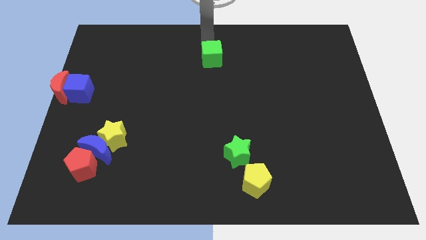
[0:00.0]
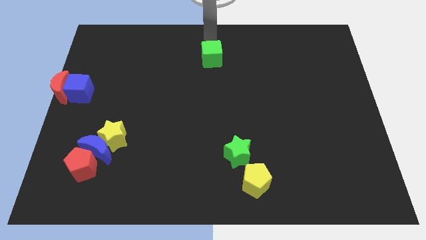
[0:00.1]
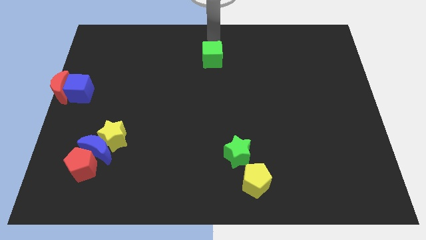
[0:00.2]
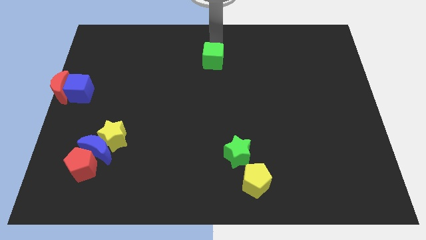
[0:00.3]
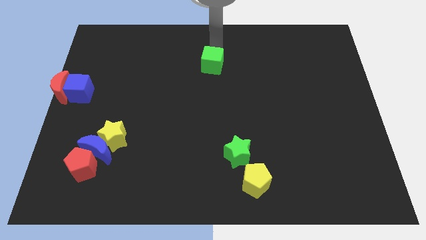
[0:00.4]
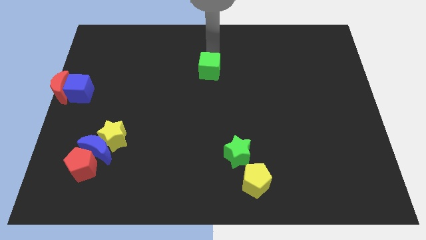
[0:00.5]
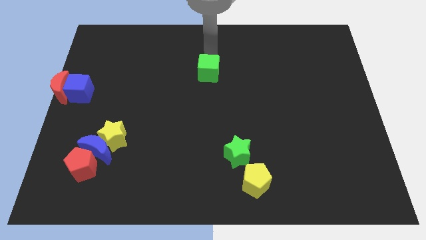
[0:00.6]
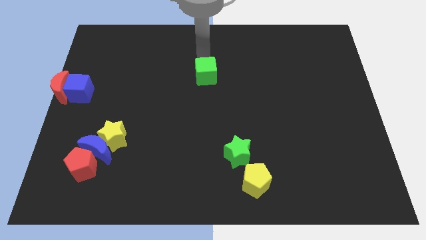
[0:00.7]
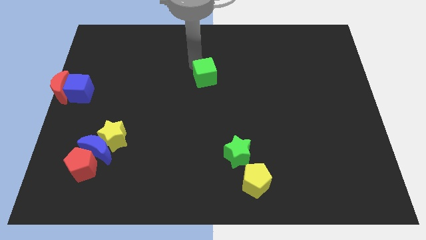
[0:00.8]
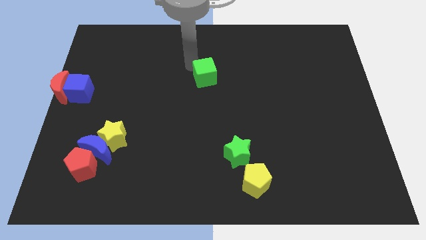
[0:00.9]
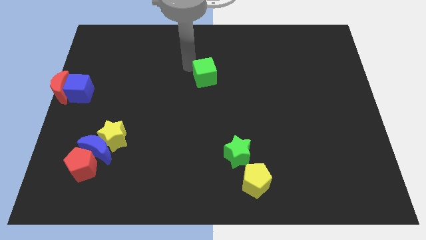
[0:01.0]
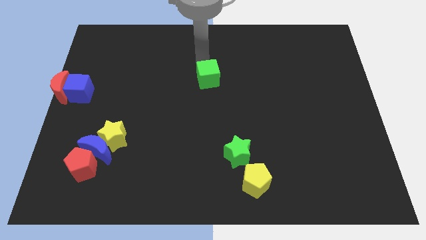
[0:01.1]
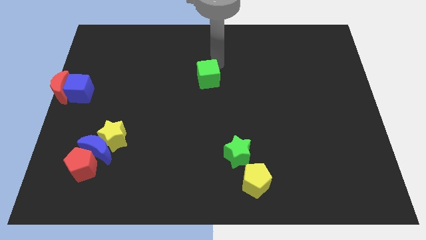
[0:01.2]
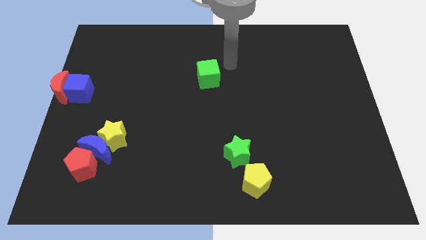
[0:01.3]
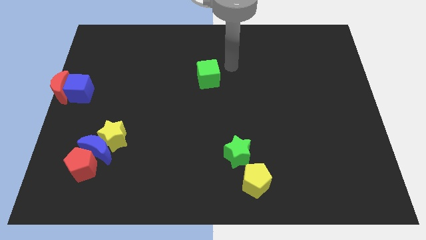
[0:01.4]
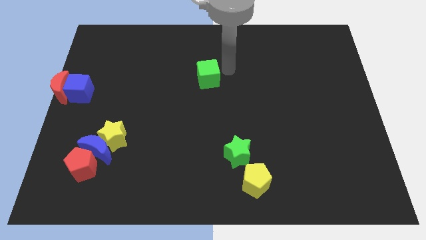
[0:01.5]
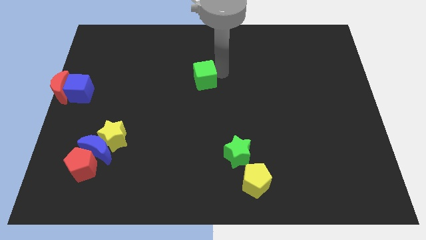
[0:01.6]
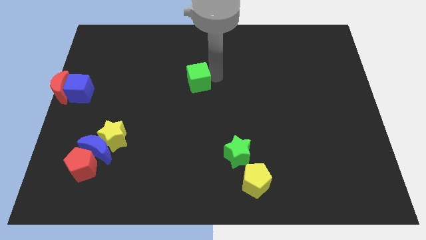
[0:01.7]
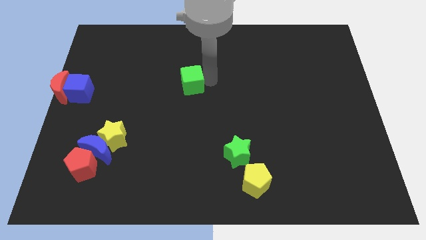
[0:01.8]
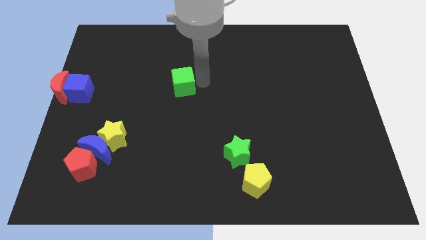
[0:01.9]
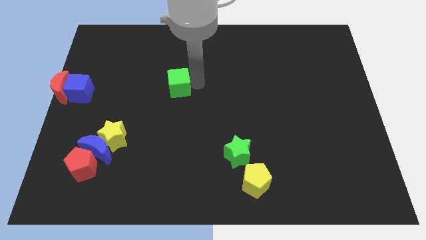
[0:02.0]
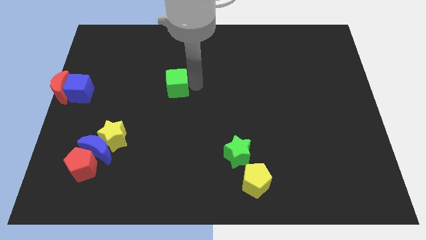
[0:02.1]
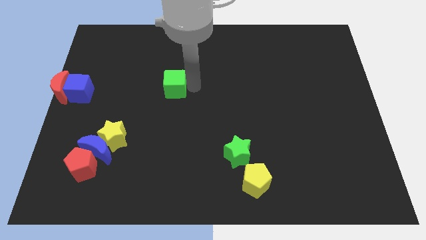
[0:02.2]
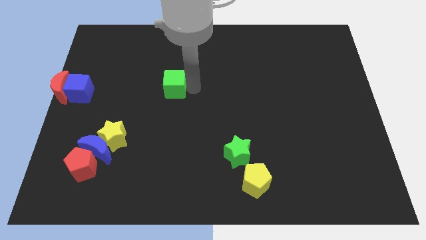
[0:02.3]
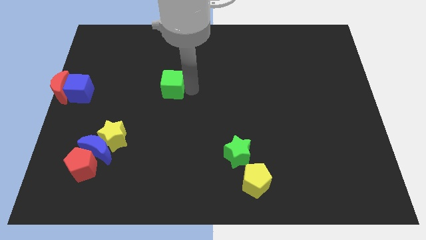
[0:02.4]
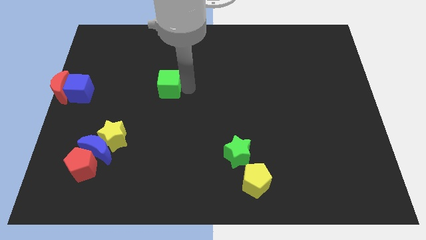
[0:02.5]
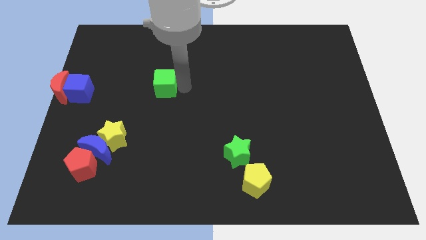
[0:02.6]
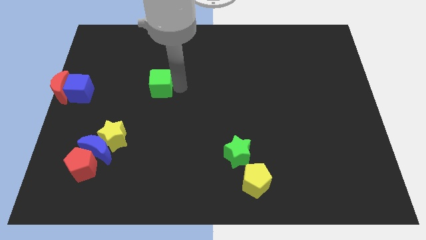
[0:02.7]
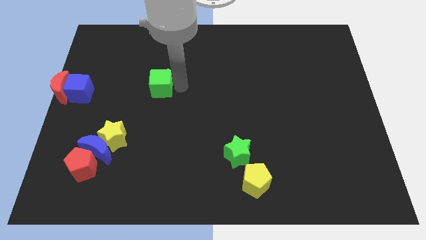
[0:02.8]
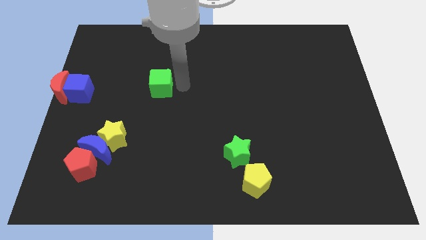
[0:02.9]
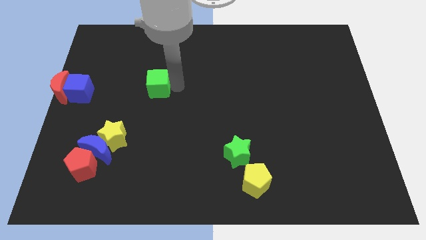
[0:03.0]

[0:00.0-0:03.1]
place green cube to the right of blue cube

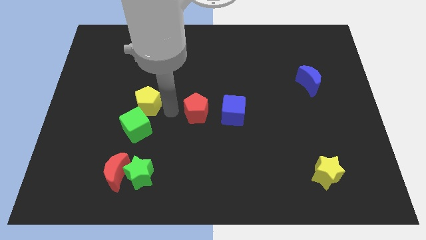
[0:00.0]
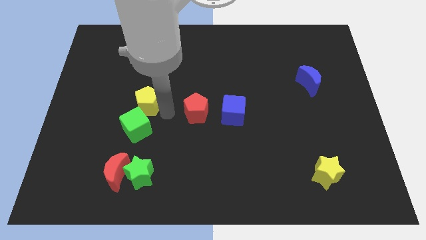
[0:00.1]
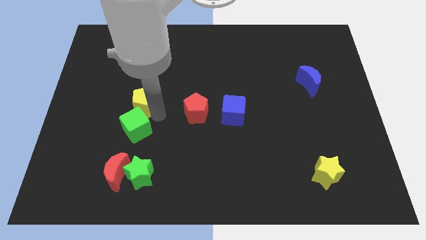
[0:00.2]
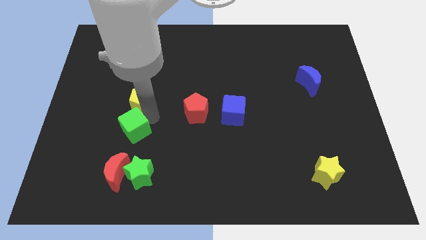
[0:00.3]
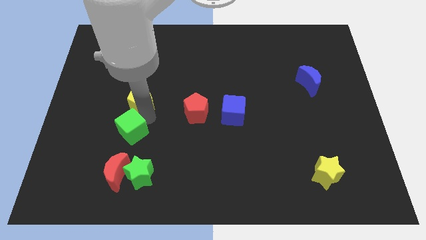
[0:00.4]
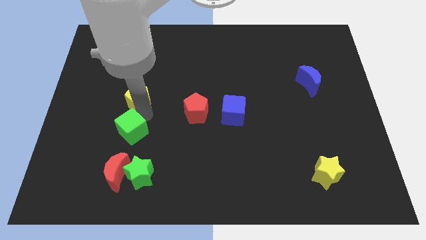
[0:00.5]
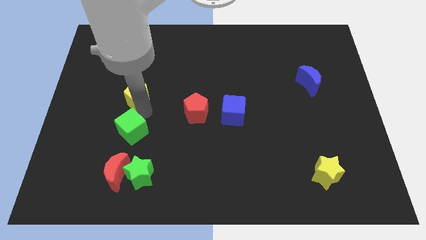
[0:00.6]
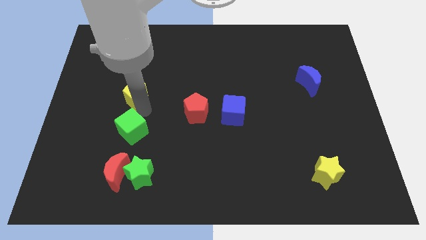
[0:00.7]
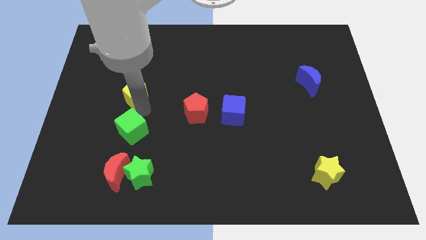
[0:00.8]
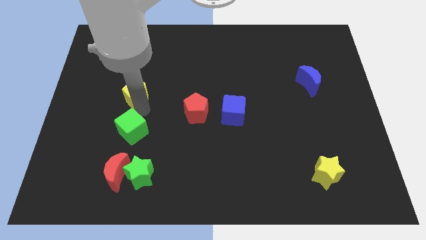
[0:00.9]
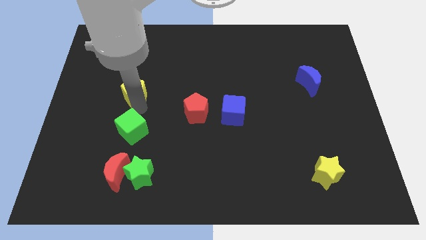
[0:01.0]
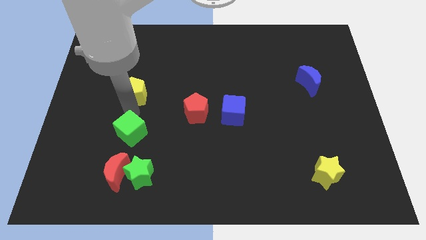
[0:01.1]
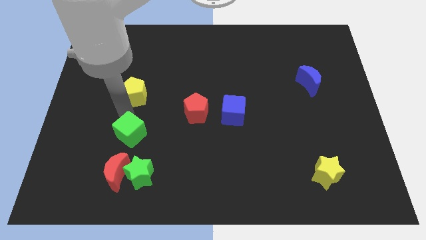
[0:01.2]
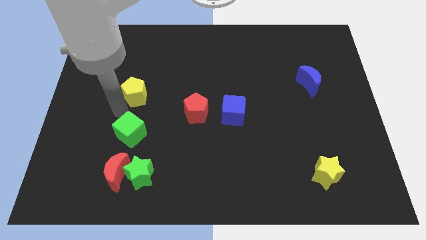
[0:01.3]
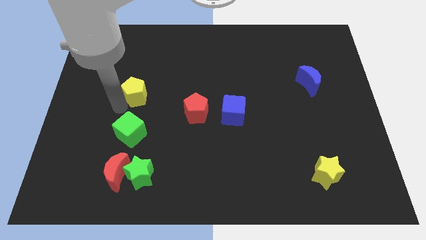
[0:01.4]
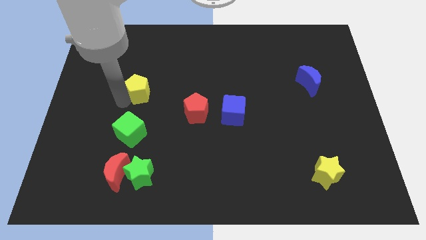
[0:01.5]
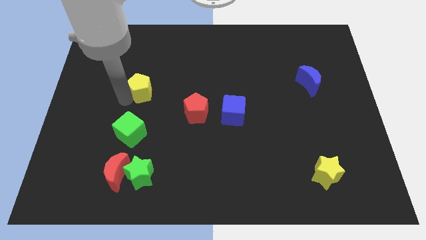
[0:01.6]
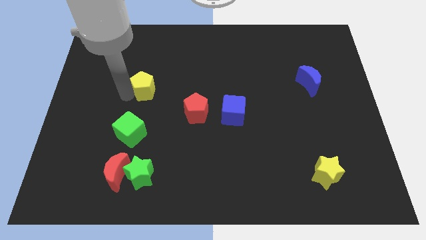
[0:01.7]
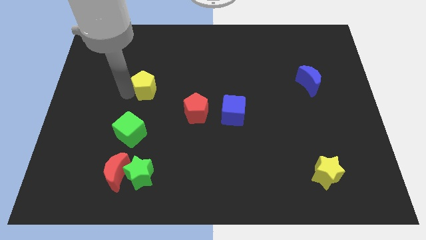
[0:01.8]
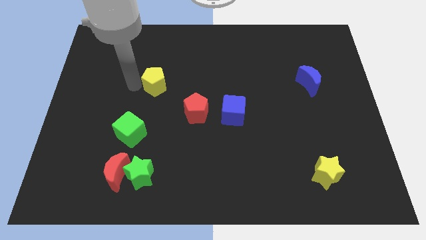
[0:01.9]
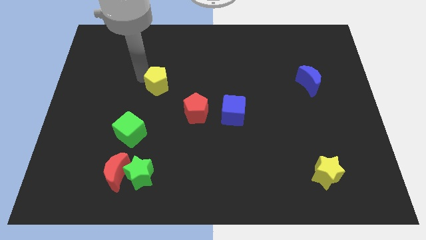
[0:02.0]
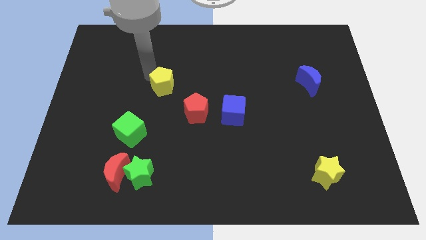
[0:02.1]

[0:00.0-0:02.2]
move the yellow pentagon away from the green cube

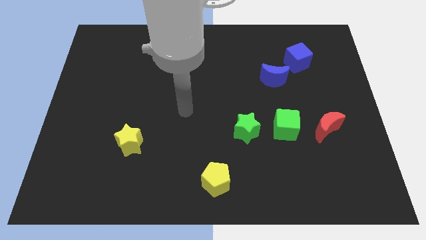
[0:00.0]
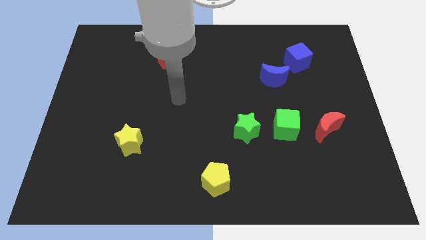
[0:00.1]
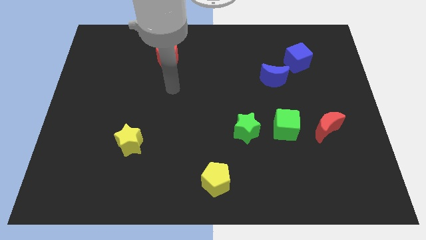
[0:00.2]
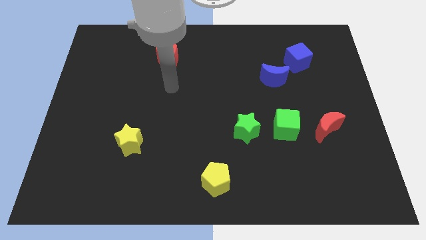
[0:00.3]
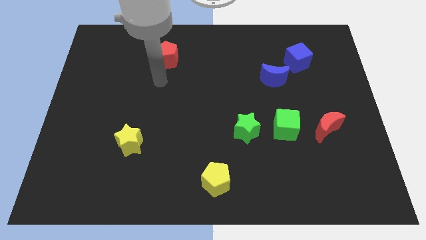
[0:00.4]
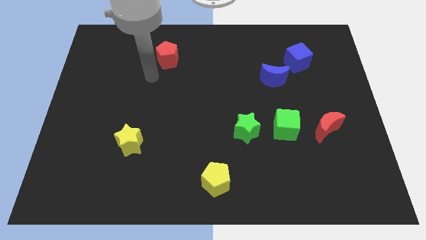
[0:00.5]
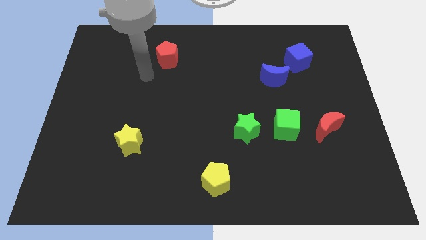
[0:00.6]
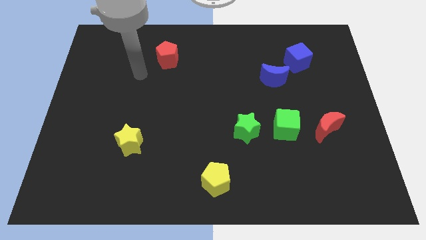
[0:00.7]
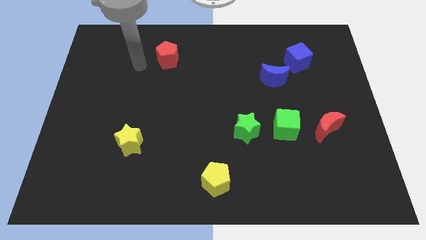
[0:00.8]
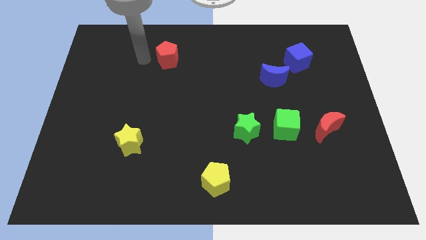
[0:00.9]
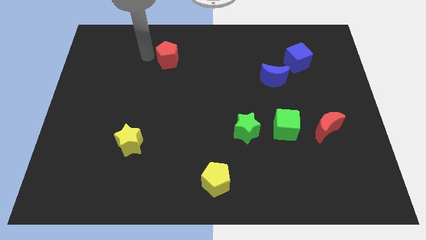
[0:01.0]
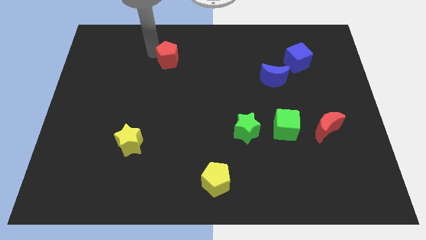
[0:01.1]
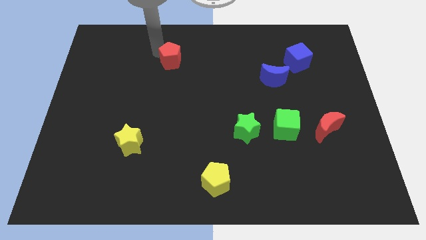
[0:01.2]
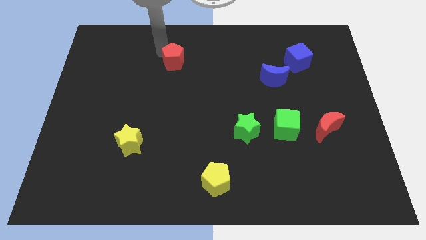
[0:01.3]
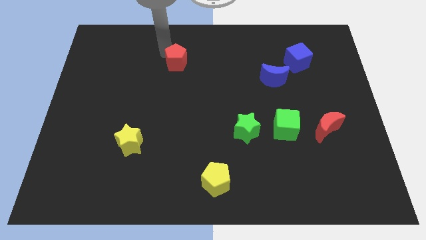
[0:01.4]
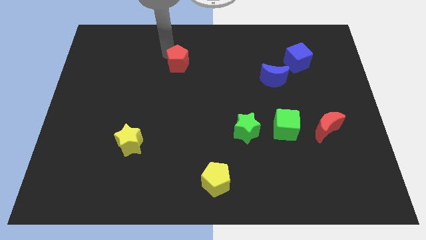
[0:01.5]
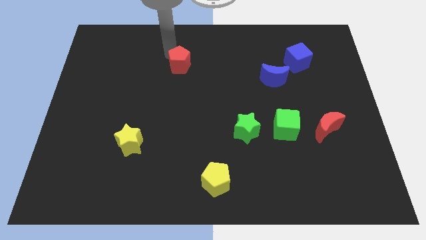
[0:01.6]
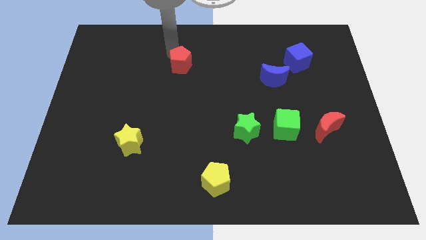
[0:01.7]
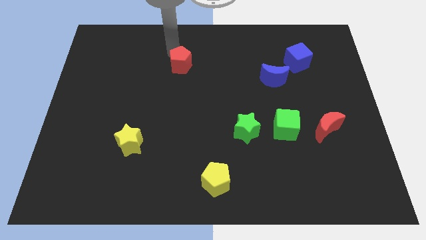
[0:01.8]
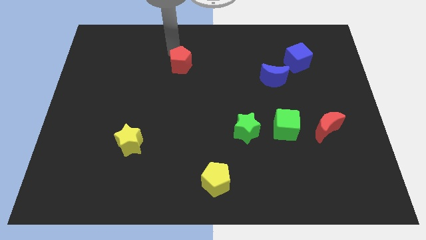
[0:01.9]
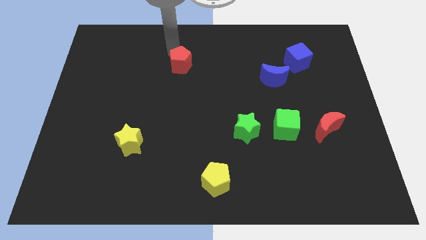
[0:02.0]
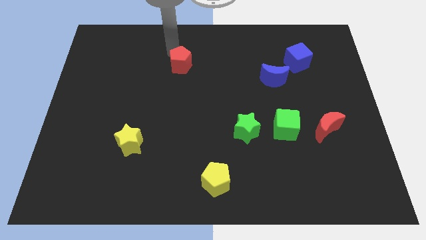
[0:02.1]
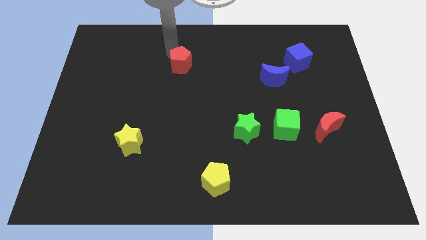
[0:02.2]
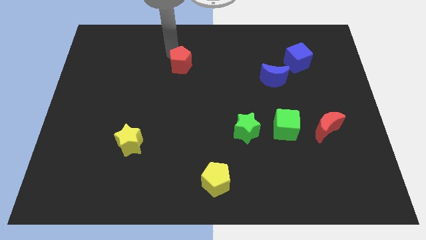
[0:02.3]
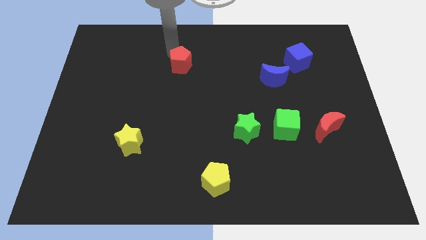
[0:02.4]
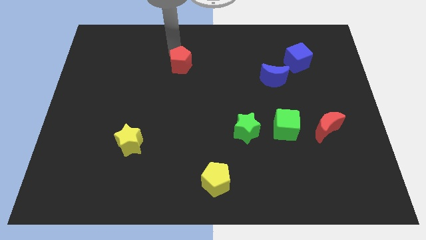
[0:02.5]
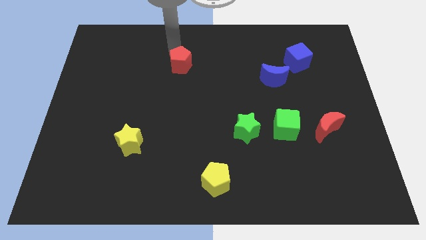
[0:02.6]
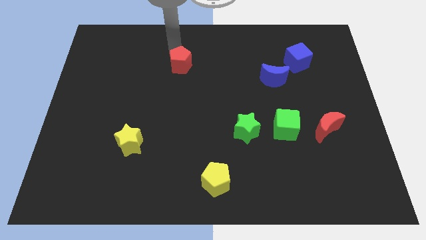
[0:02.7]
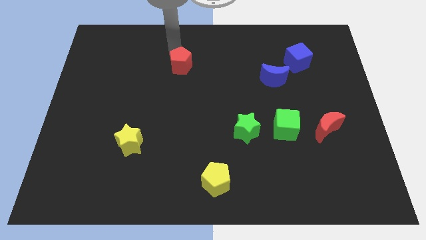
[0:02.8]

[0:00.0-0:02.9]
move the red pentagon slightly towards the center of the board

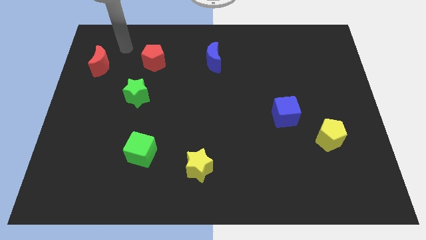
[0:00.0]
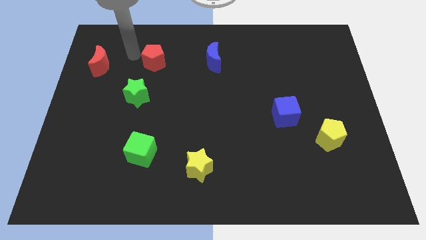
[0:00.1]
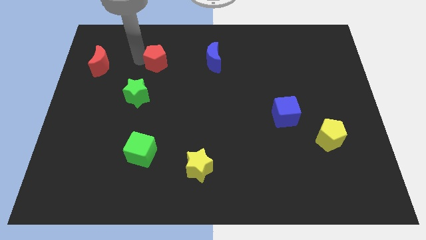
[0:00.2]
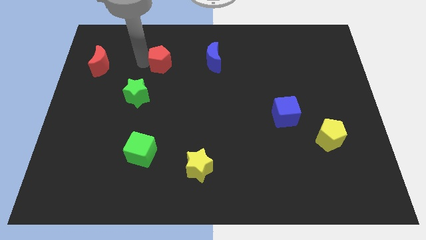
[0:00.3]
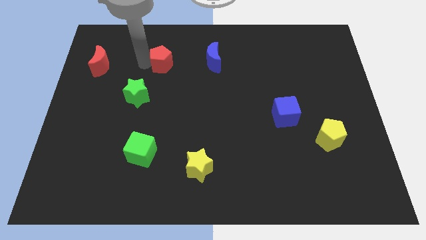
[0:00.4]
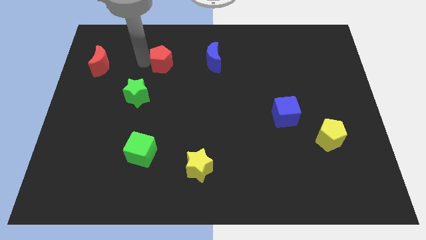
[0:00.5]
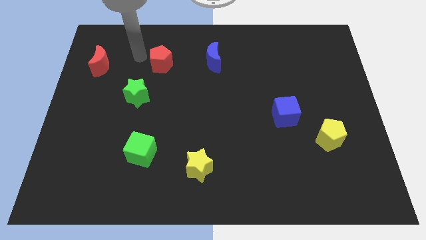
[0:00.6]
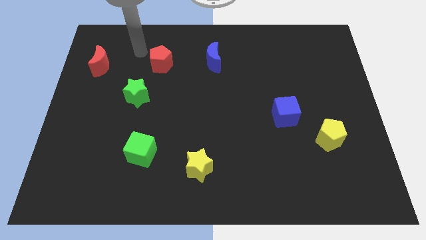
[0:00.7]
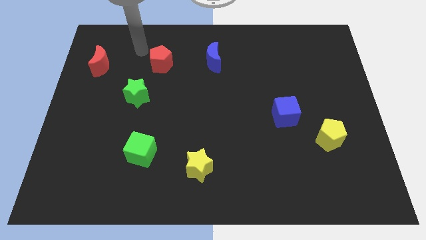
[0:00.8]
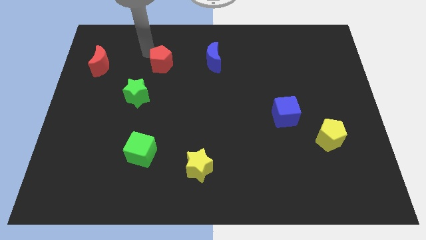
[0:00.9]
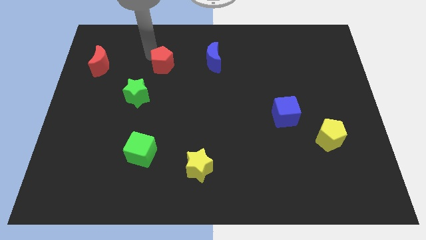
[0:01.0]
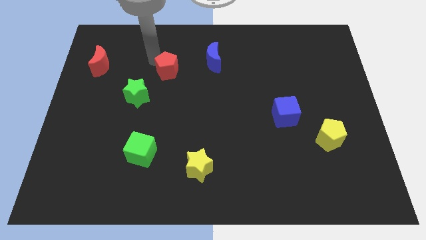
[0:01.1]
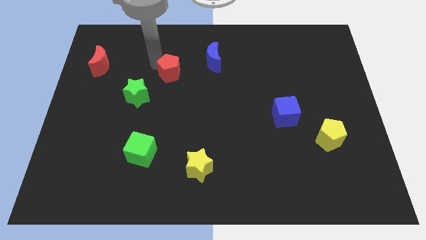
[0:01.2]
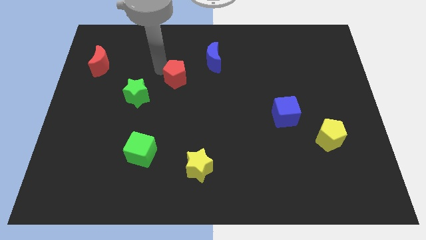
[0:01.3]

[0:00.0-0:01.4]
place the red pentagon at the top right of the green star
